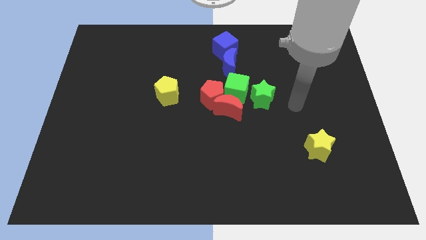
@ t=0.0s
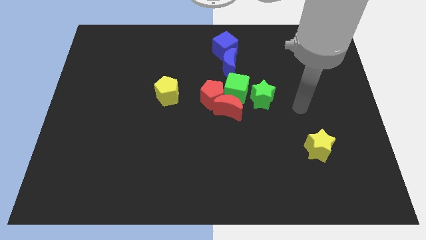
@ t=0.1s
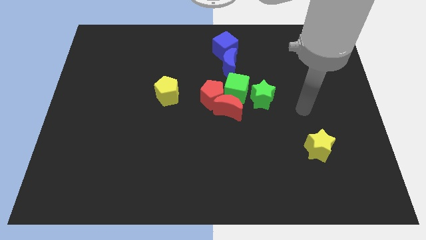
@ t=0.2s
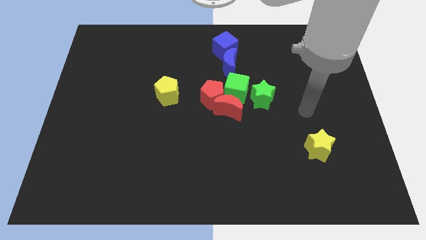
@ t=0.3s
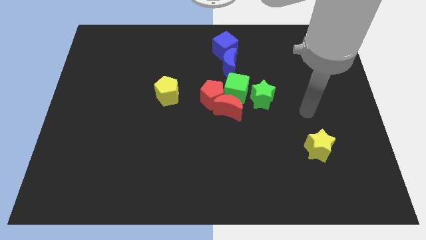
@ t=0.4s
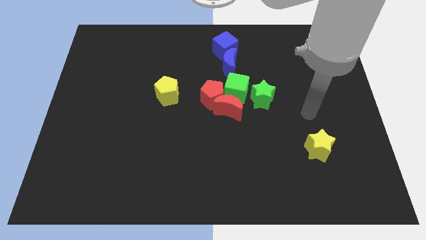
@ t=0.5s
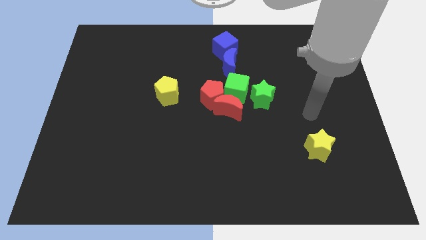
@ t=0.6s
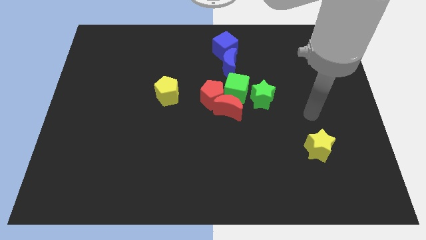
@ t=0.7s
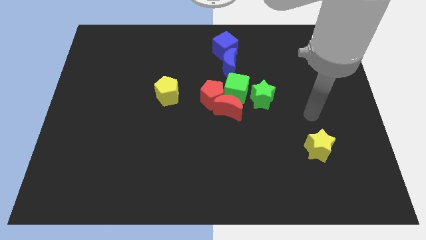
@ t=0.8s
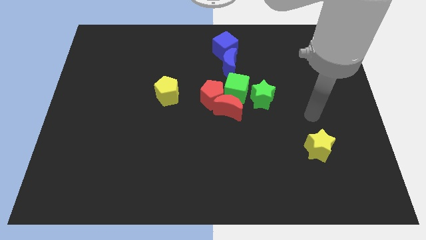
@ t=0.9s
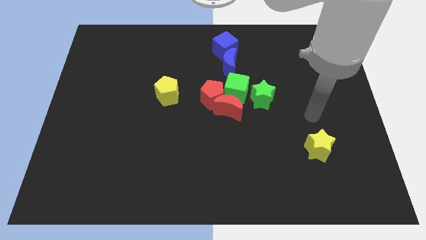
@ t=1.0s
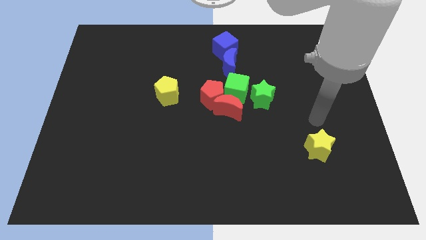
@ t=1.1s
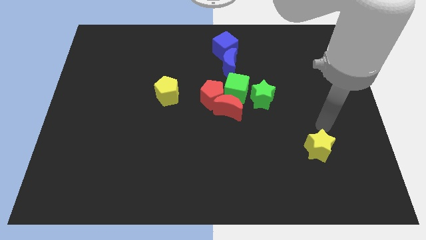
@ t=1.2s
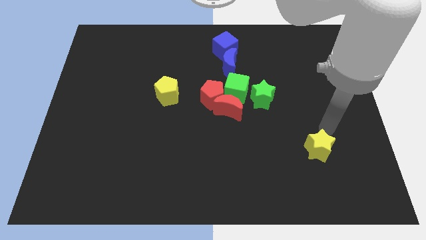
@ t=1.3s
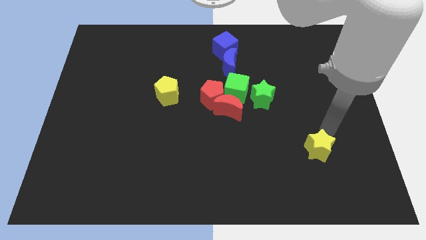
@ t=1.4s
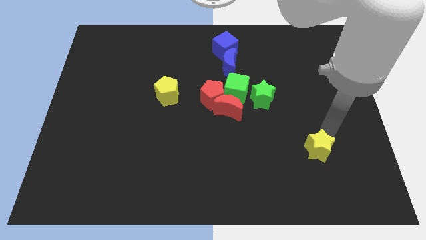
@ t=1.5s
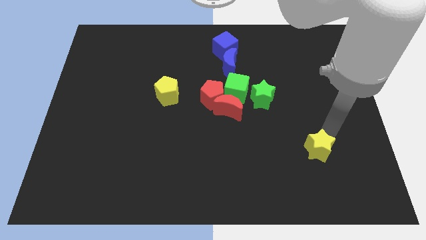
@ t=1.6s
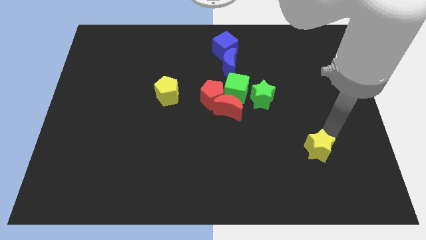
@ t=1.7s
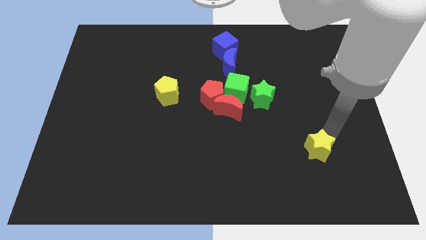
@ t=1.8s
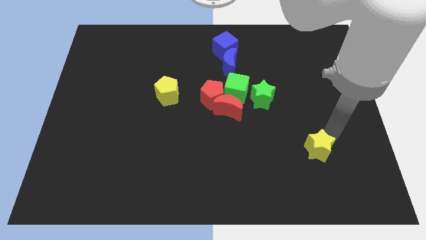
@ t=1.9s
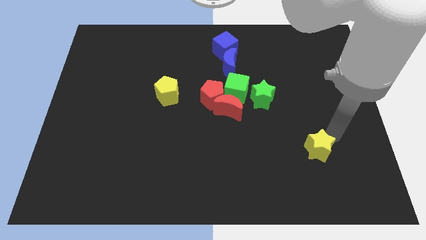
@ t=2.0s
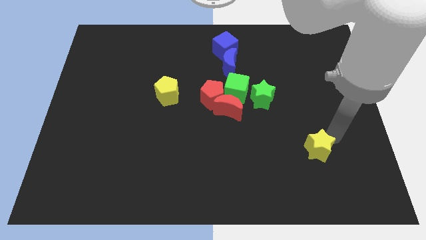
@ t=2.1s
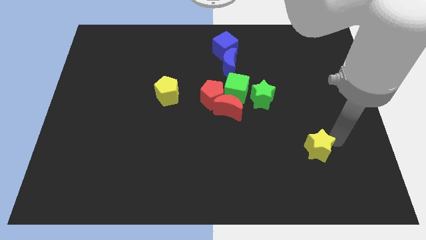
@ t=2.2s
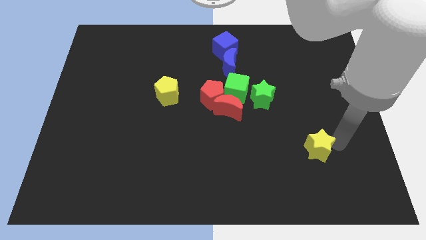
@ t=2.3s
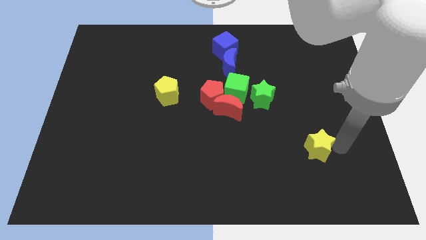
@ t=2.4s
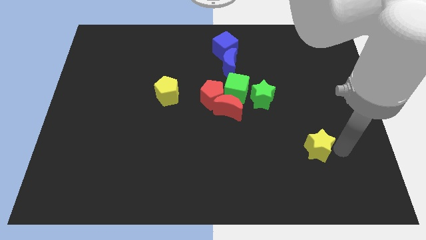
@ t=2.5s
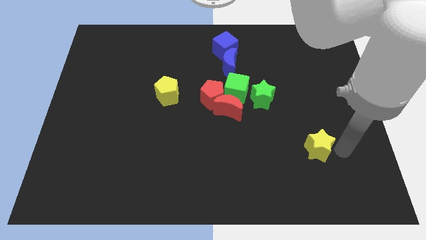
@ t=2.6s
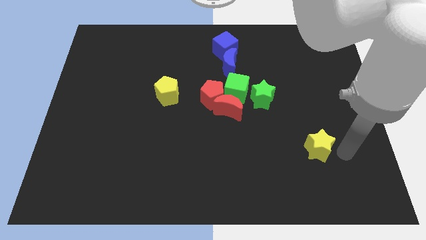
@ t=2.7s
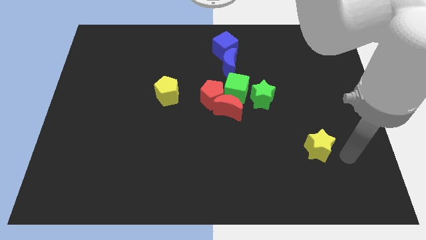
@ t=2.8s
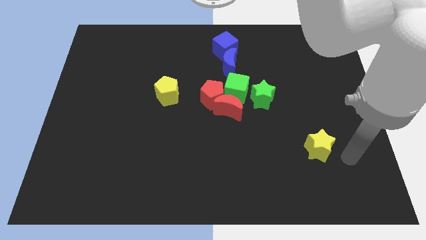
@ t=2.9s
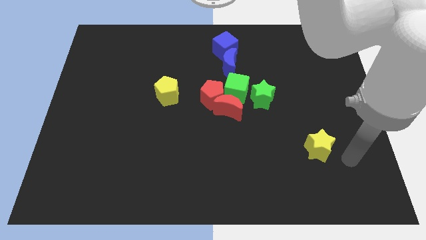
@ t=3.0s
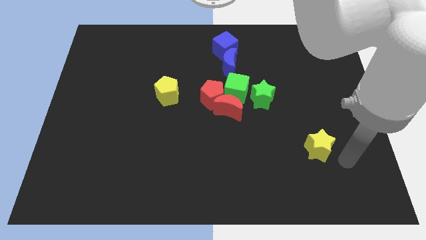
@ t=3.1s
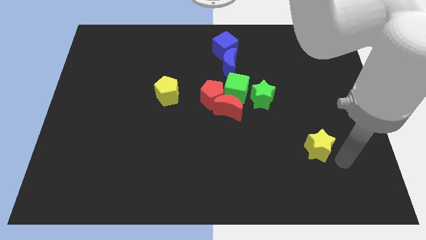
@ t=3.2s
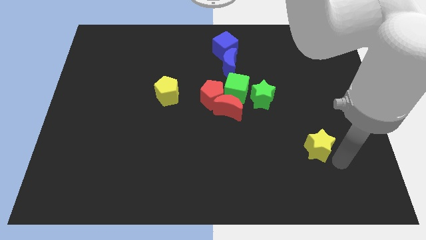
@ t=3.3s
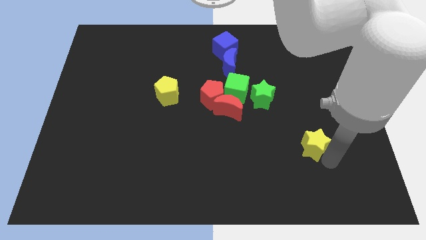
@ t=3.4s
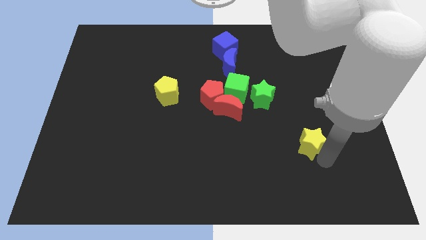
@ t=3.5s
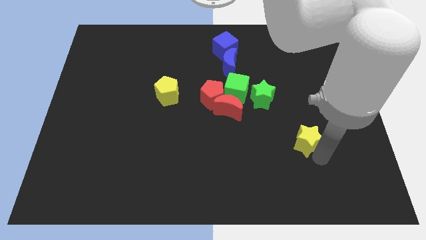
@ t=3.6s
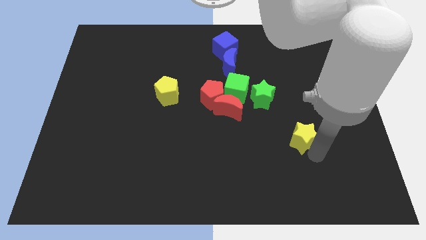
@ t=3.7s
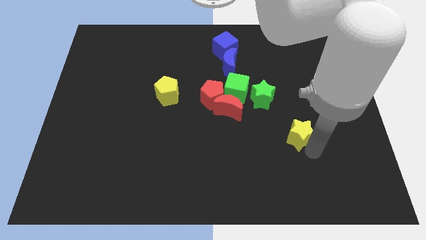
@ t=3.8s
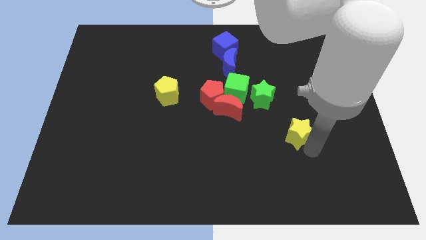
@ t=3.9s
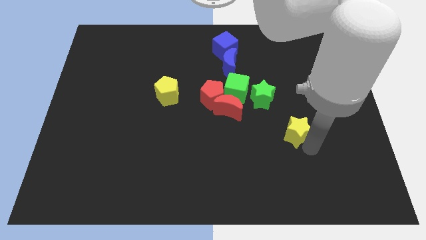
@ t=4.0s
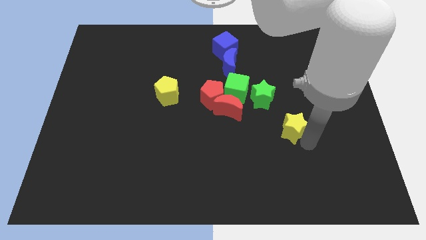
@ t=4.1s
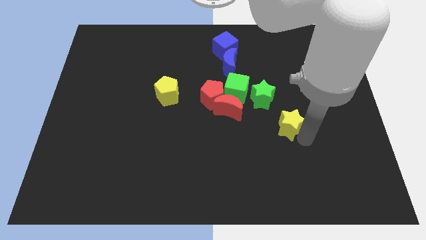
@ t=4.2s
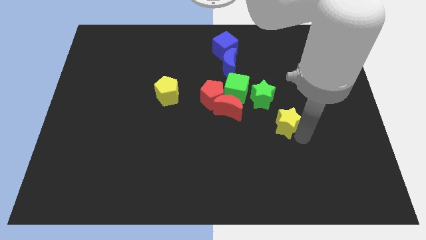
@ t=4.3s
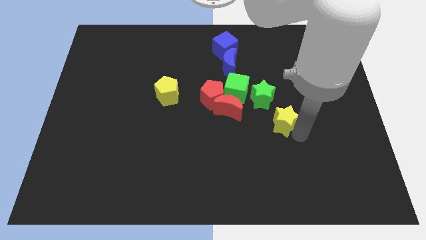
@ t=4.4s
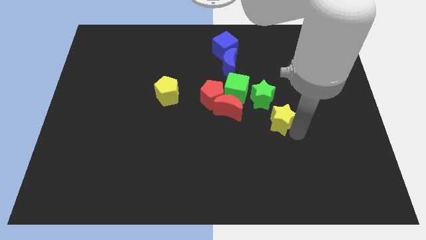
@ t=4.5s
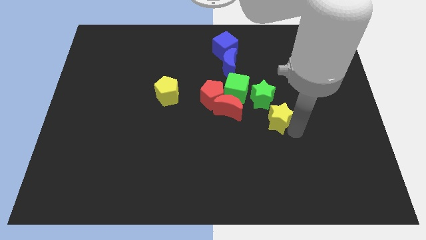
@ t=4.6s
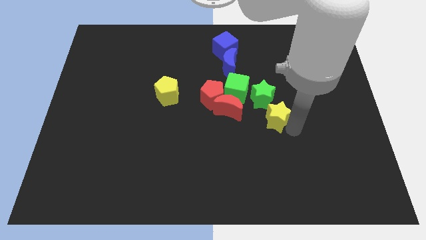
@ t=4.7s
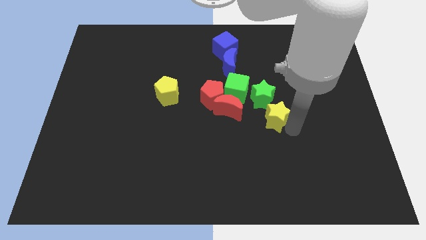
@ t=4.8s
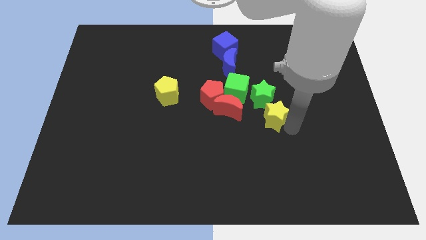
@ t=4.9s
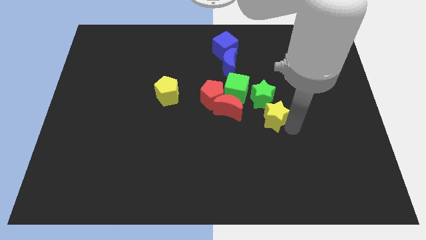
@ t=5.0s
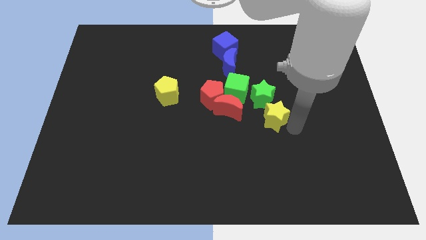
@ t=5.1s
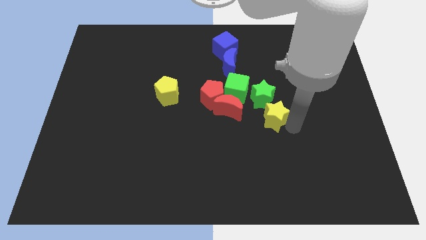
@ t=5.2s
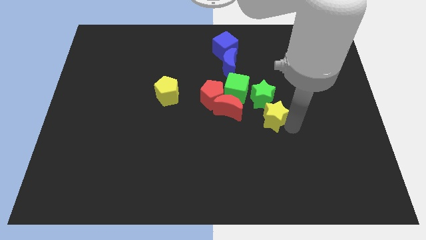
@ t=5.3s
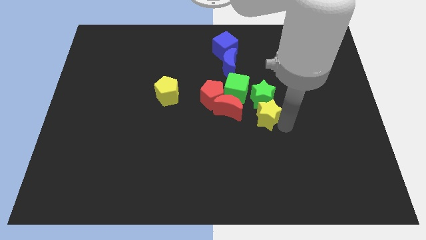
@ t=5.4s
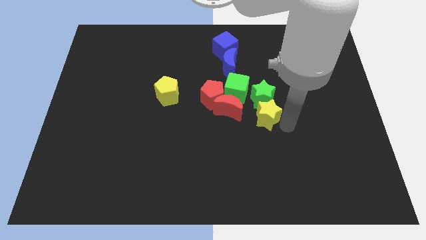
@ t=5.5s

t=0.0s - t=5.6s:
move the yellow star close to the bottom side of the green star

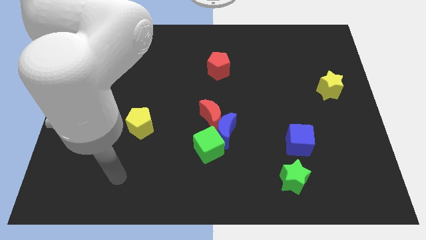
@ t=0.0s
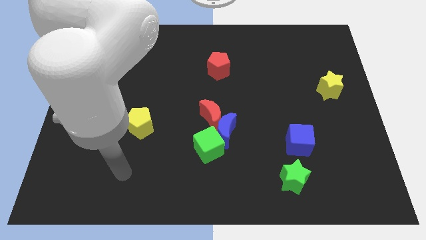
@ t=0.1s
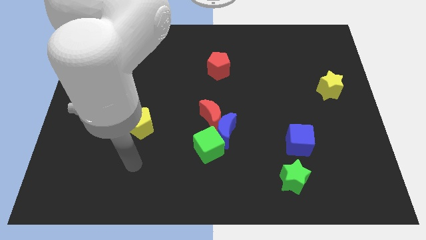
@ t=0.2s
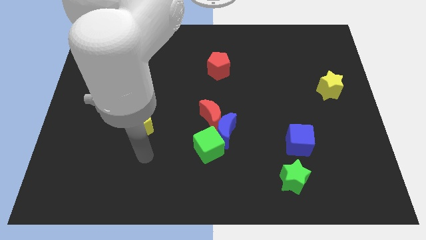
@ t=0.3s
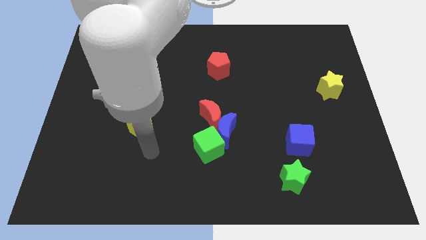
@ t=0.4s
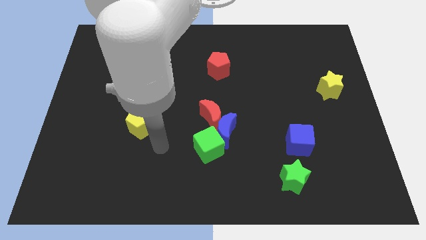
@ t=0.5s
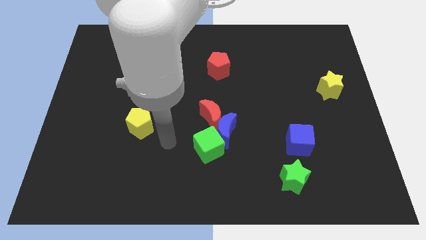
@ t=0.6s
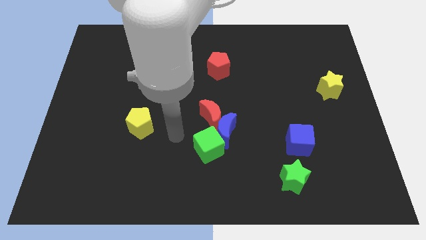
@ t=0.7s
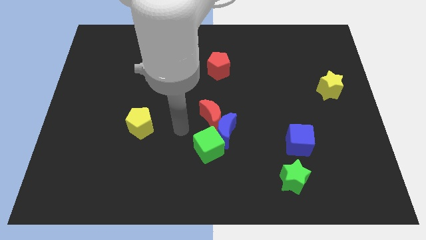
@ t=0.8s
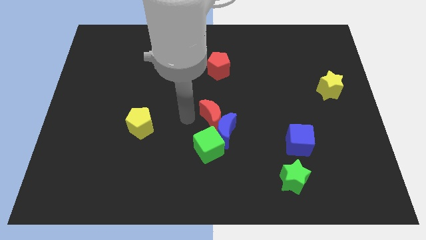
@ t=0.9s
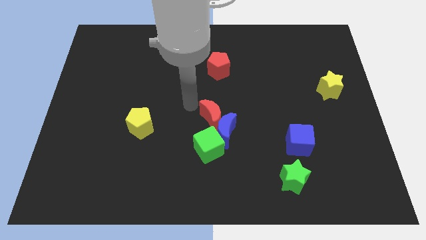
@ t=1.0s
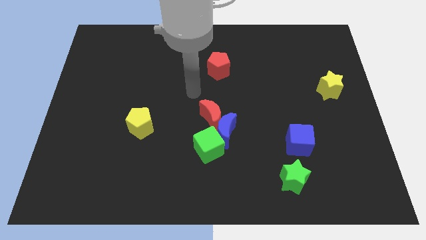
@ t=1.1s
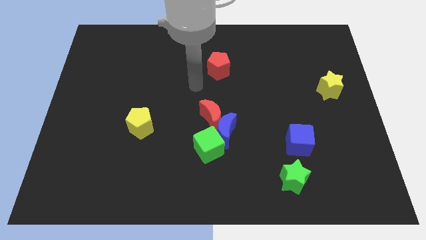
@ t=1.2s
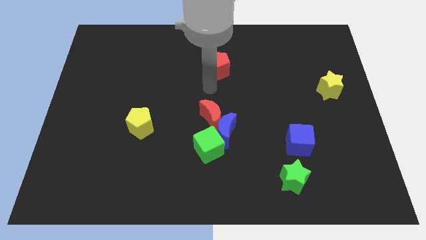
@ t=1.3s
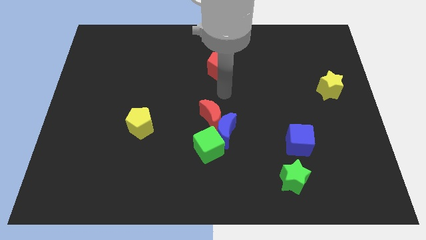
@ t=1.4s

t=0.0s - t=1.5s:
go near the red pentagon

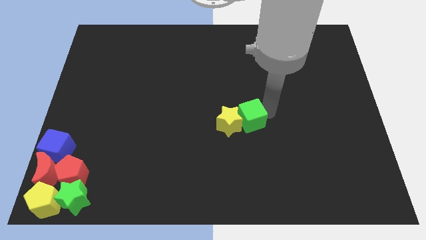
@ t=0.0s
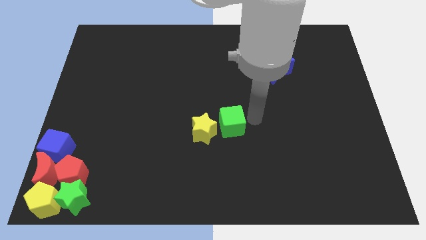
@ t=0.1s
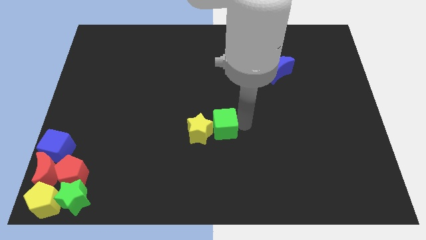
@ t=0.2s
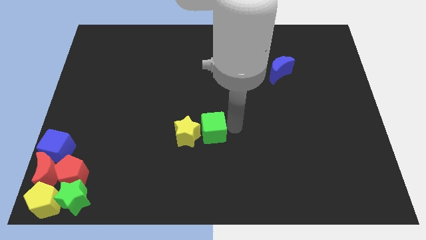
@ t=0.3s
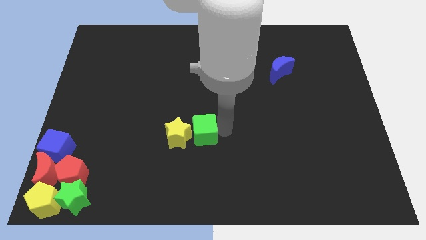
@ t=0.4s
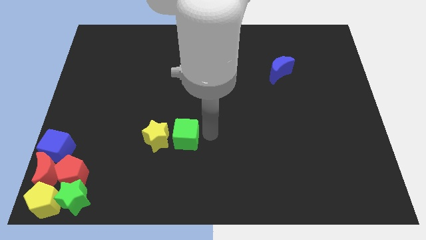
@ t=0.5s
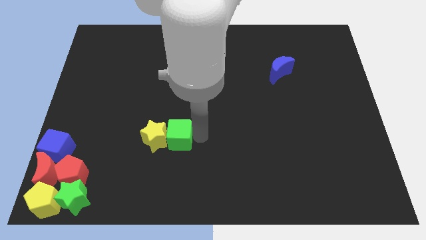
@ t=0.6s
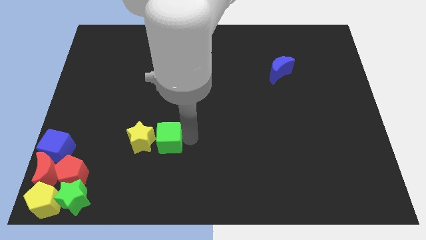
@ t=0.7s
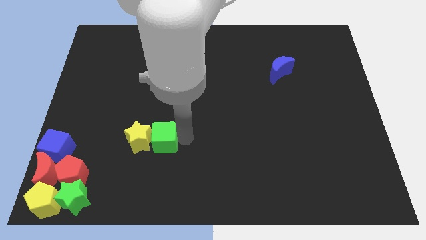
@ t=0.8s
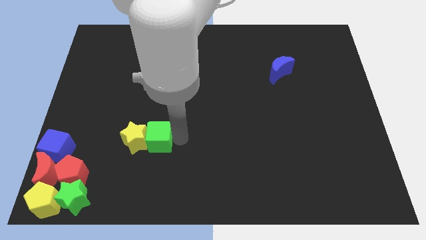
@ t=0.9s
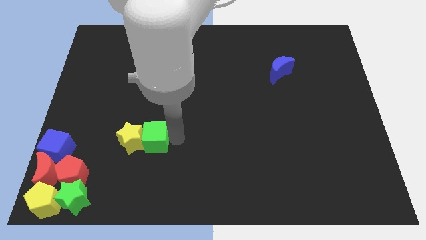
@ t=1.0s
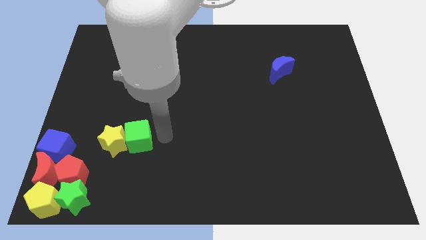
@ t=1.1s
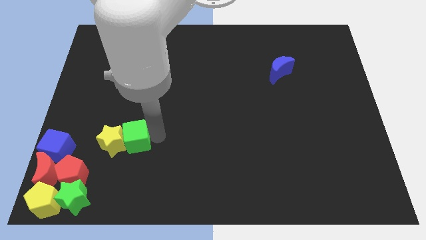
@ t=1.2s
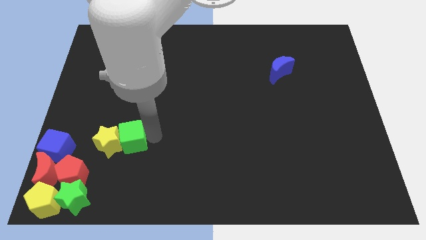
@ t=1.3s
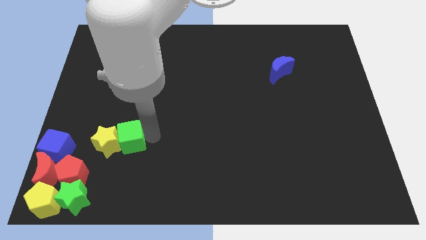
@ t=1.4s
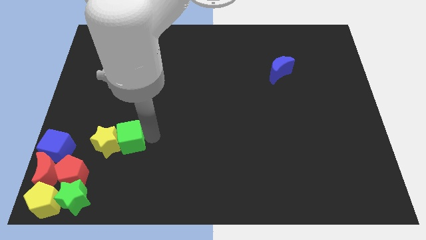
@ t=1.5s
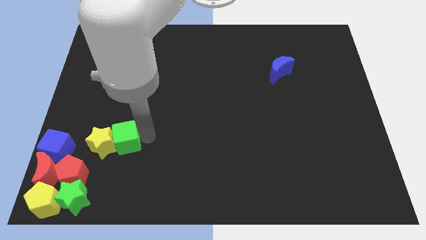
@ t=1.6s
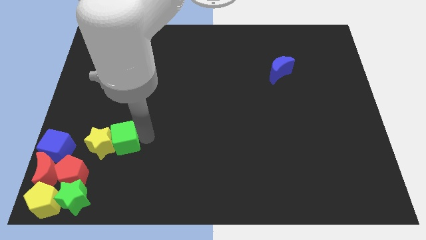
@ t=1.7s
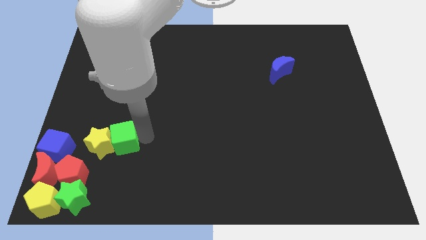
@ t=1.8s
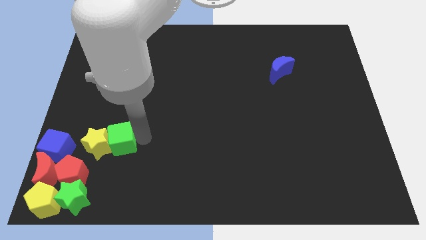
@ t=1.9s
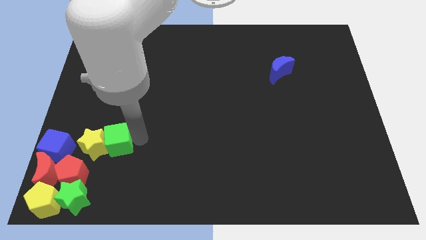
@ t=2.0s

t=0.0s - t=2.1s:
drag a yellow star and green cube towards the bottom left of the board
